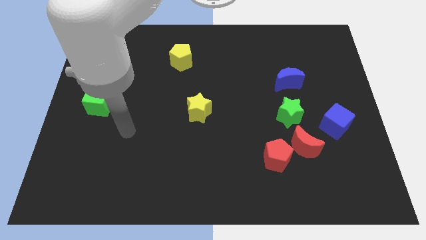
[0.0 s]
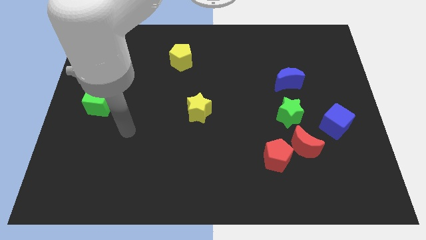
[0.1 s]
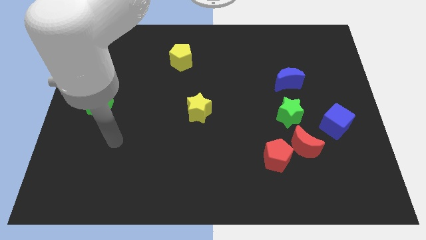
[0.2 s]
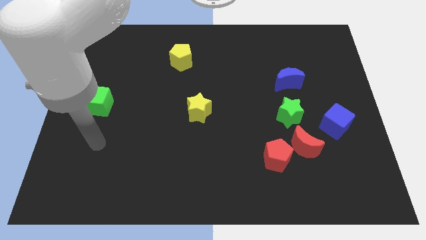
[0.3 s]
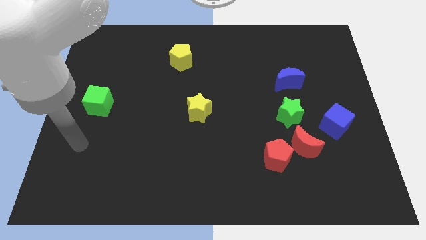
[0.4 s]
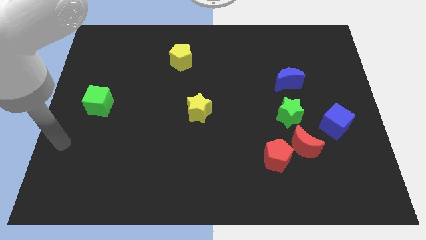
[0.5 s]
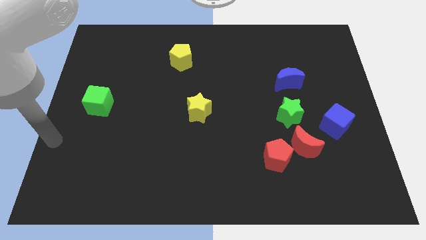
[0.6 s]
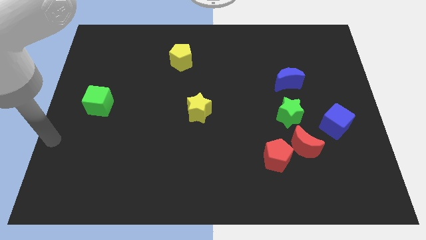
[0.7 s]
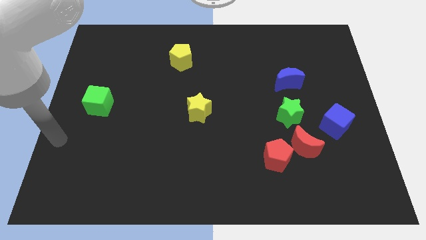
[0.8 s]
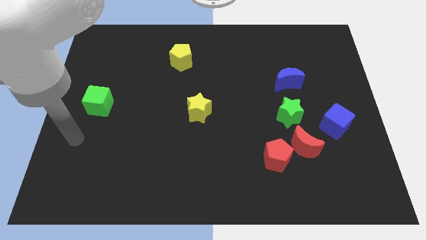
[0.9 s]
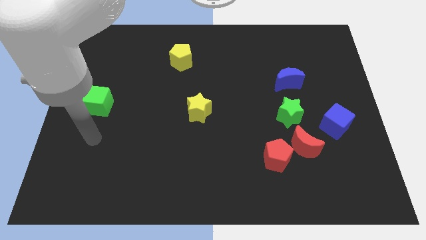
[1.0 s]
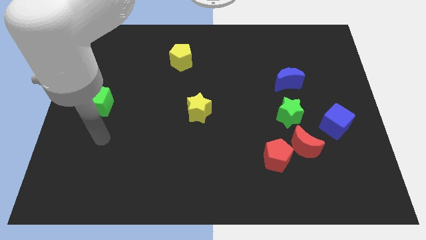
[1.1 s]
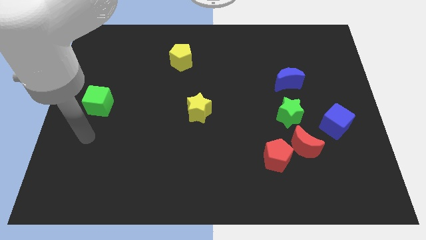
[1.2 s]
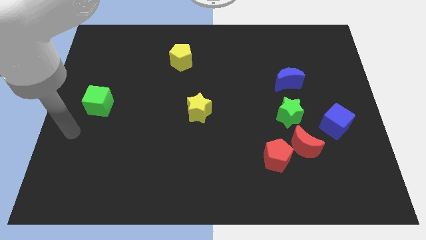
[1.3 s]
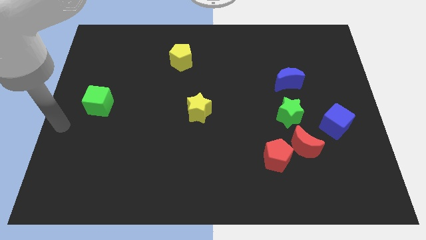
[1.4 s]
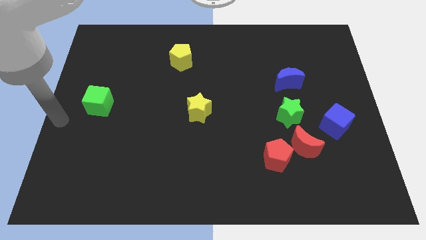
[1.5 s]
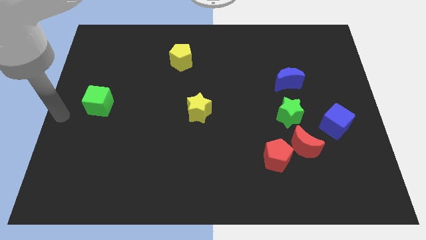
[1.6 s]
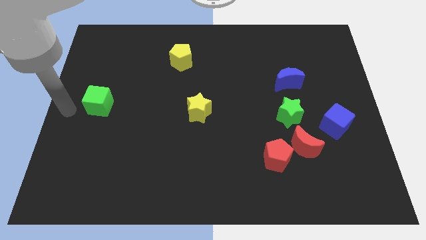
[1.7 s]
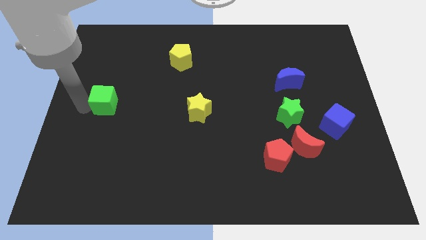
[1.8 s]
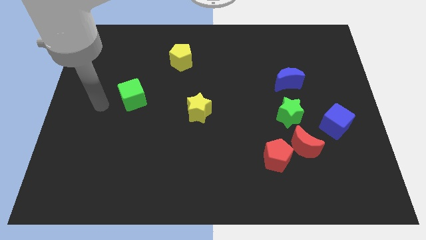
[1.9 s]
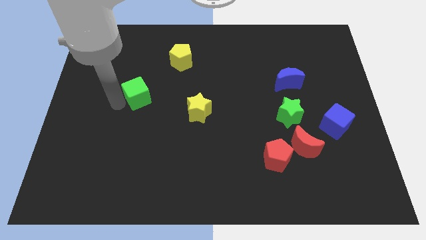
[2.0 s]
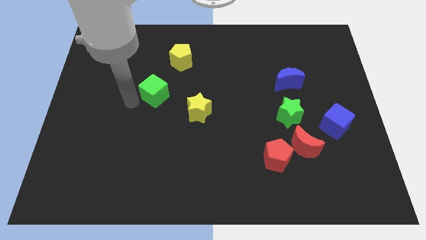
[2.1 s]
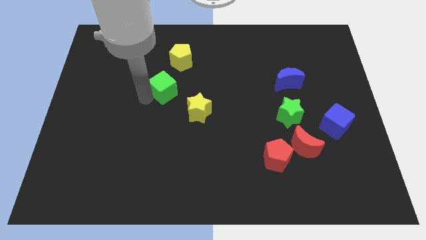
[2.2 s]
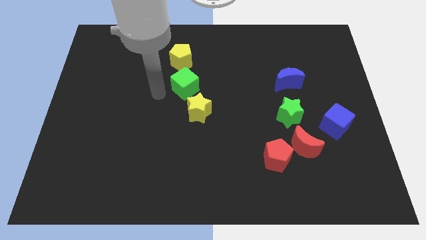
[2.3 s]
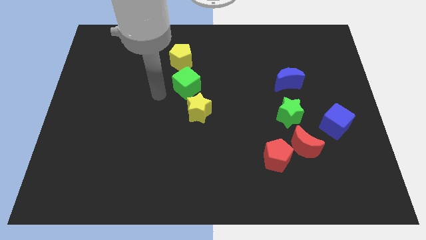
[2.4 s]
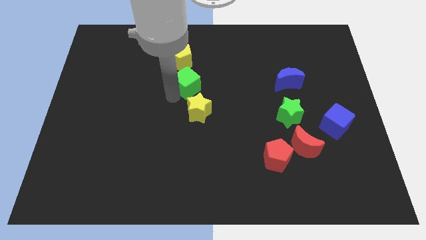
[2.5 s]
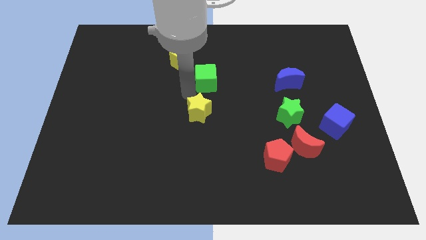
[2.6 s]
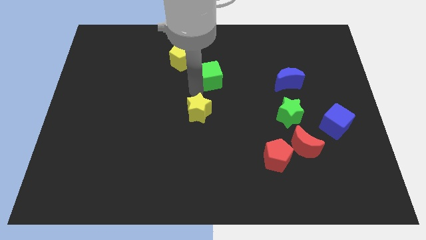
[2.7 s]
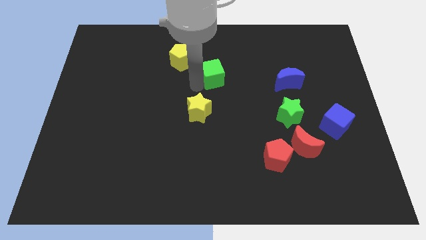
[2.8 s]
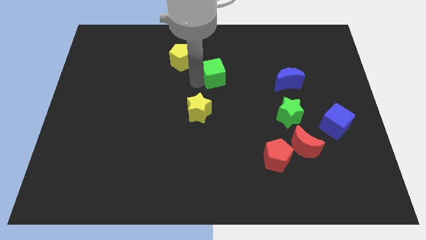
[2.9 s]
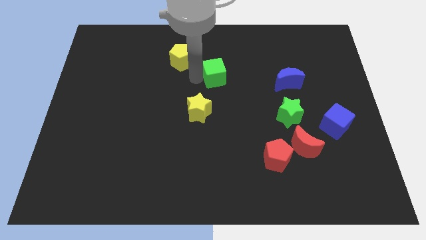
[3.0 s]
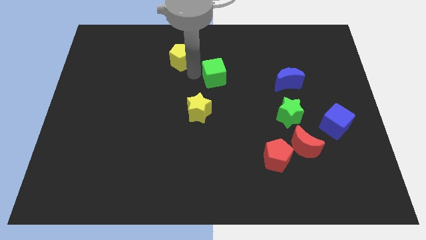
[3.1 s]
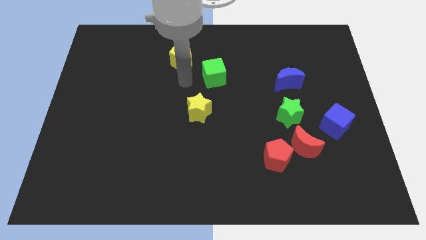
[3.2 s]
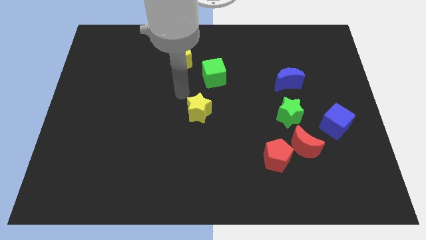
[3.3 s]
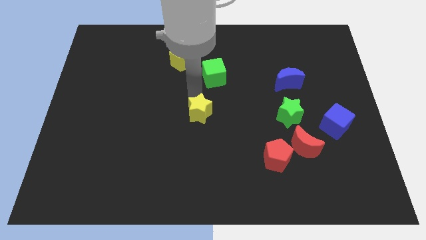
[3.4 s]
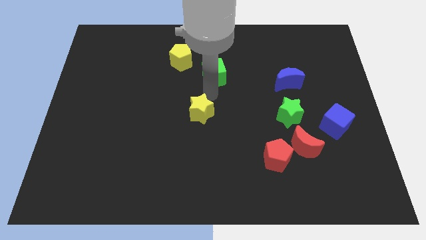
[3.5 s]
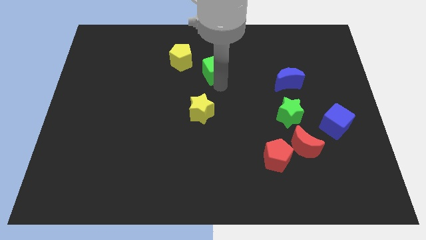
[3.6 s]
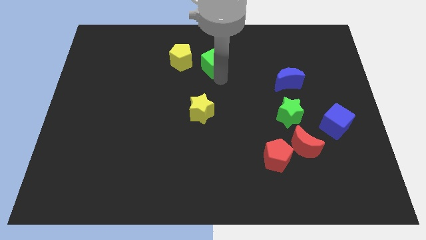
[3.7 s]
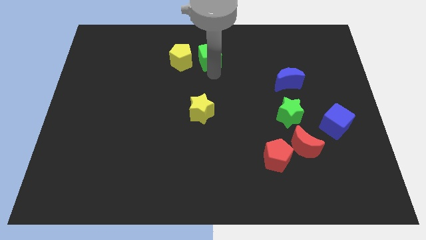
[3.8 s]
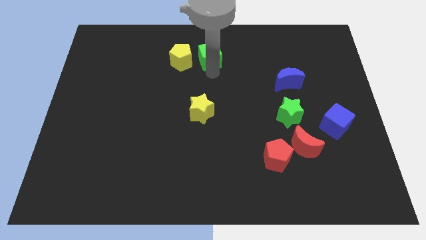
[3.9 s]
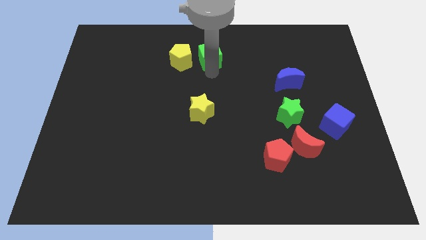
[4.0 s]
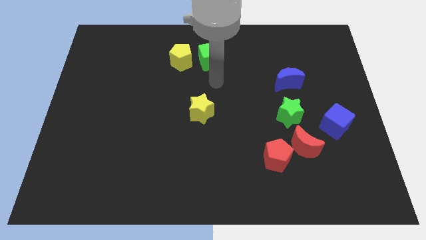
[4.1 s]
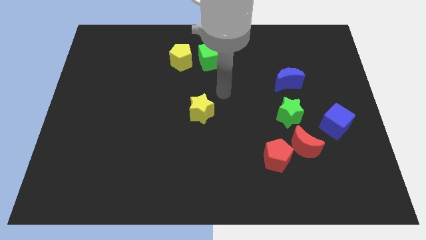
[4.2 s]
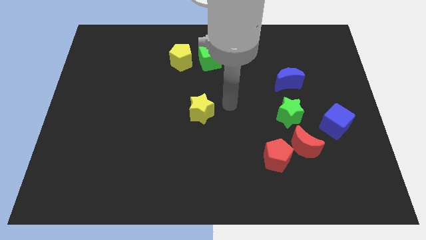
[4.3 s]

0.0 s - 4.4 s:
move green cube to the right of the yellow pentagon

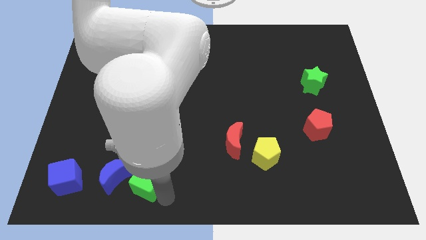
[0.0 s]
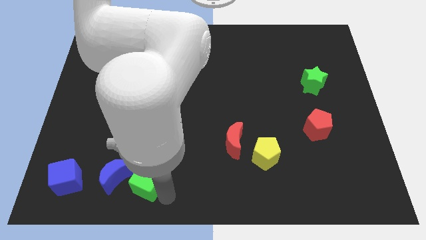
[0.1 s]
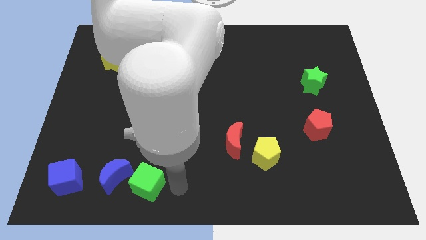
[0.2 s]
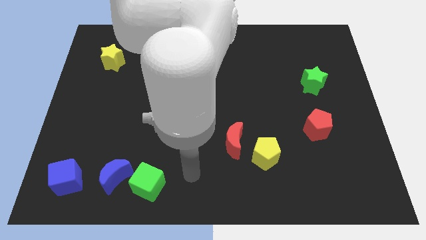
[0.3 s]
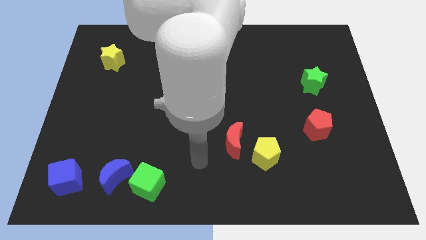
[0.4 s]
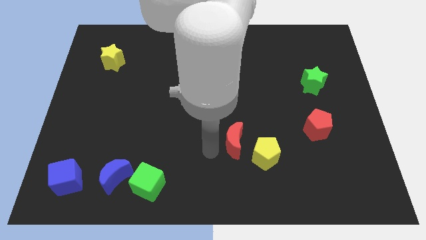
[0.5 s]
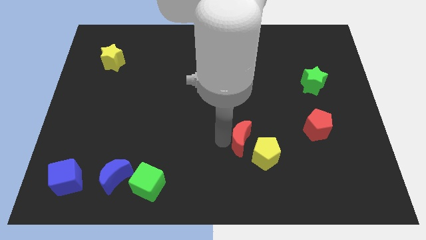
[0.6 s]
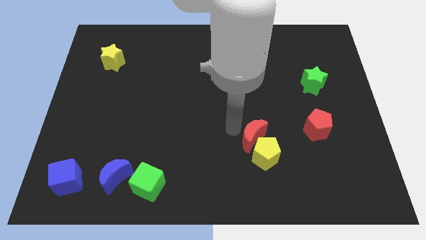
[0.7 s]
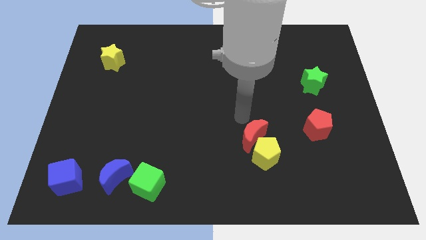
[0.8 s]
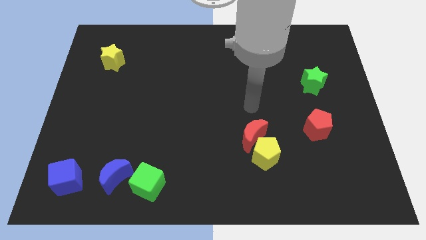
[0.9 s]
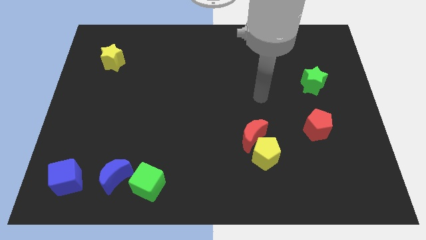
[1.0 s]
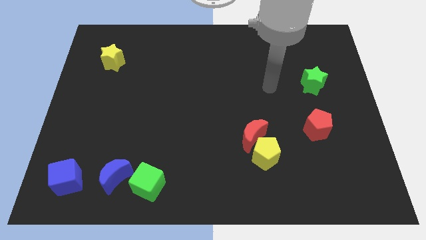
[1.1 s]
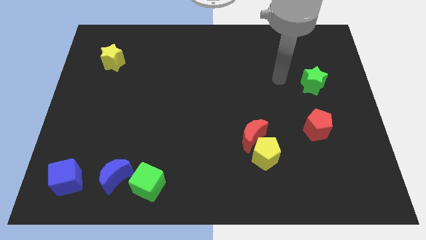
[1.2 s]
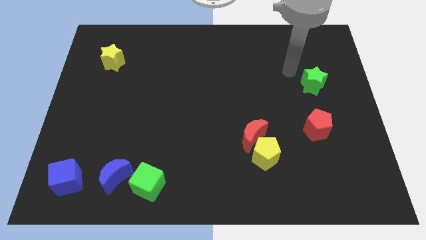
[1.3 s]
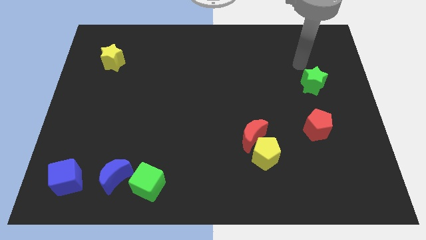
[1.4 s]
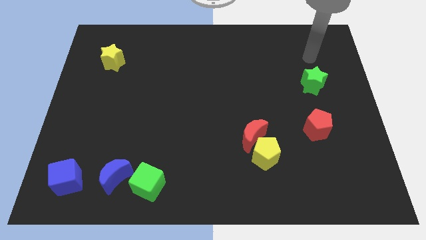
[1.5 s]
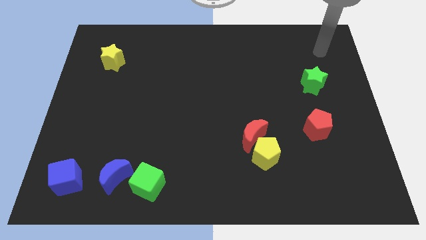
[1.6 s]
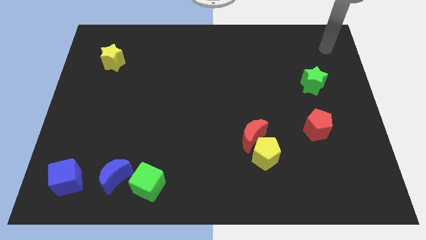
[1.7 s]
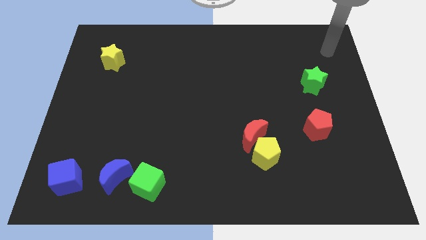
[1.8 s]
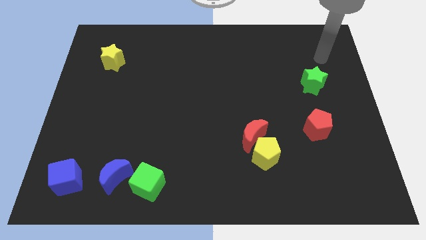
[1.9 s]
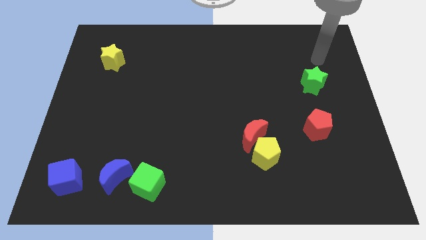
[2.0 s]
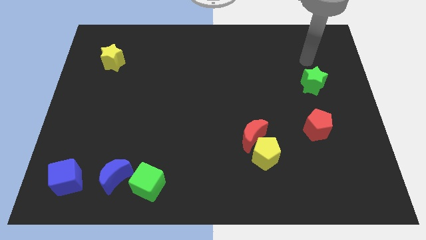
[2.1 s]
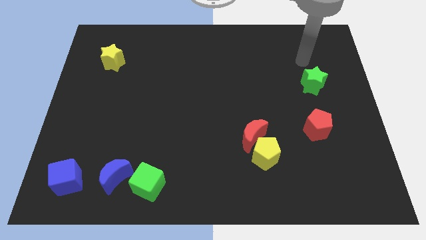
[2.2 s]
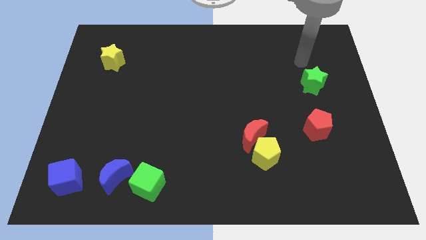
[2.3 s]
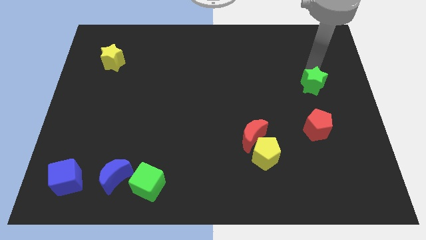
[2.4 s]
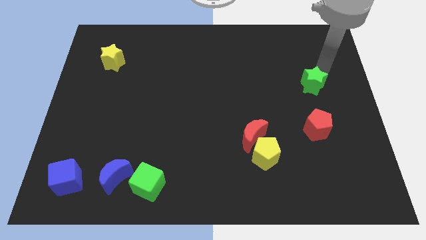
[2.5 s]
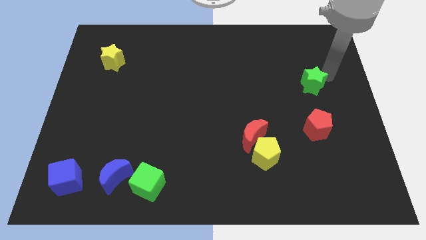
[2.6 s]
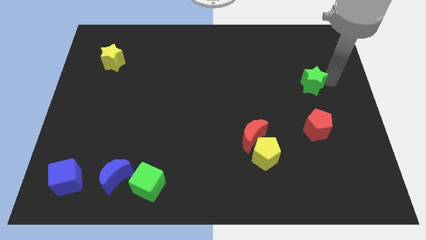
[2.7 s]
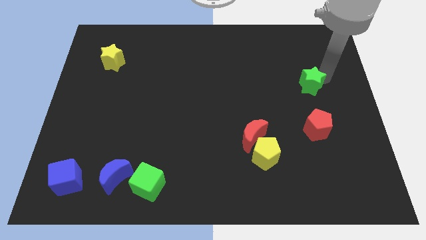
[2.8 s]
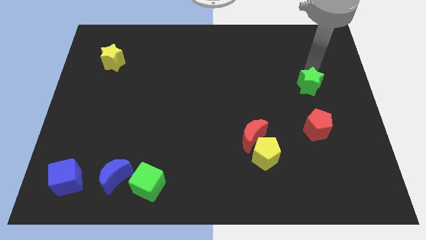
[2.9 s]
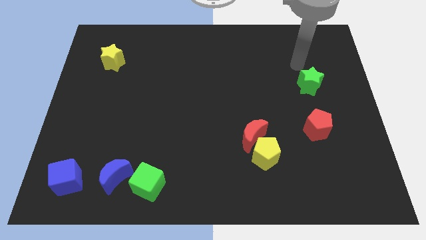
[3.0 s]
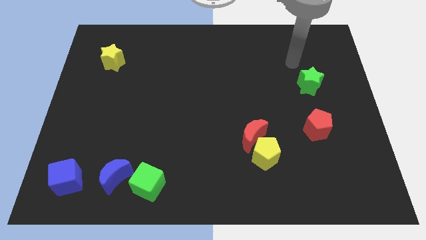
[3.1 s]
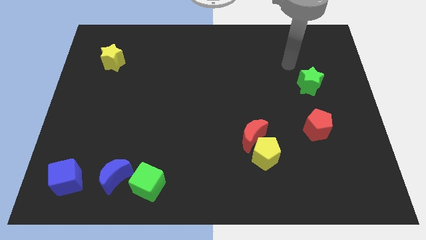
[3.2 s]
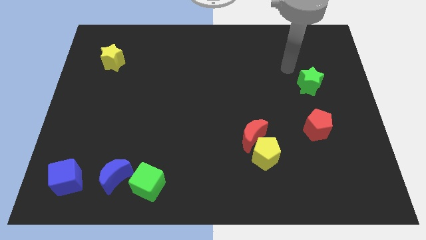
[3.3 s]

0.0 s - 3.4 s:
push the red moon to the top left of the yellow pentagon

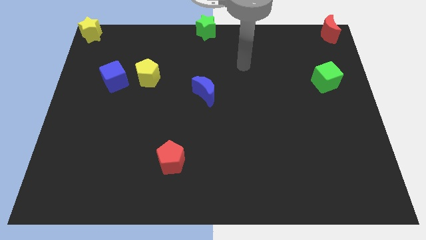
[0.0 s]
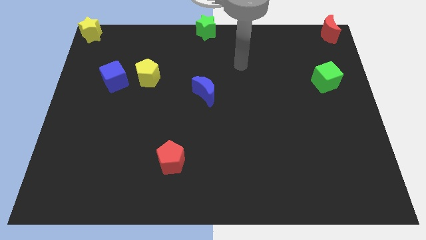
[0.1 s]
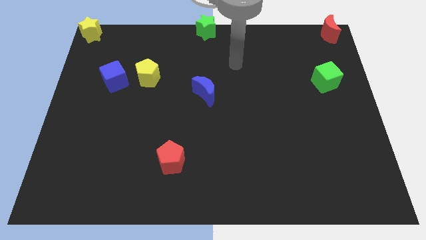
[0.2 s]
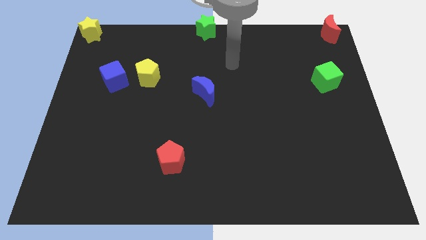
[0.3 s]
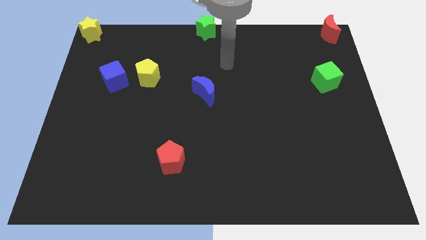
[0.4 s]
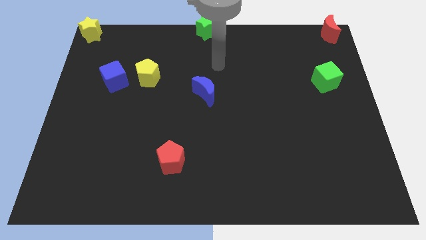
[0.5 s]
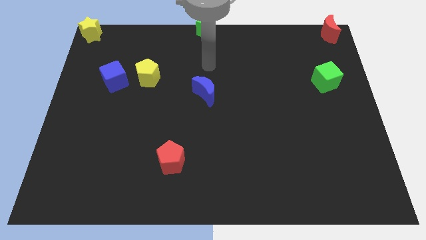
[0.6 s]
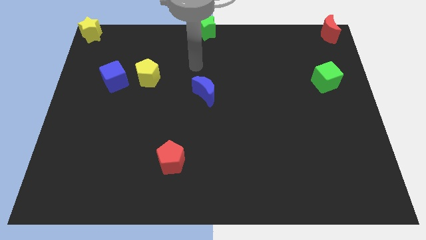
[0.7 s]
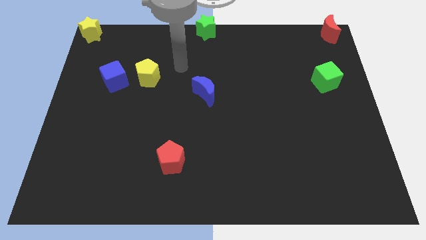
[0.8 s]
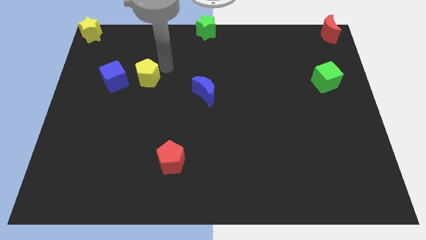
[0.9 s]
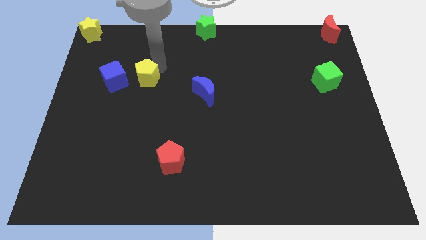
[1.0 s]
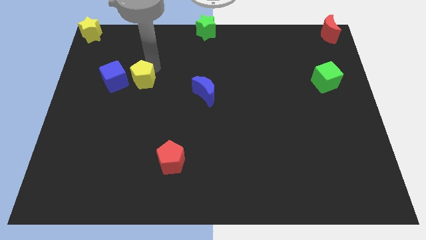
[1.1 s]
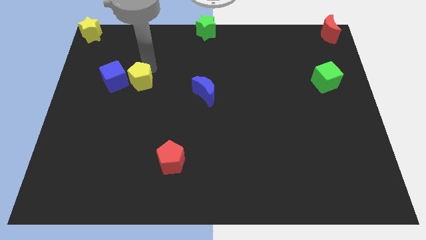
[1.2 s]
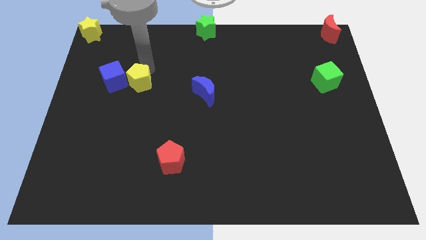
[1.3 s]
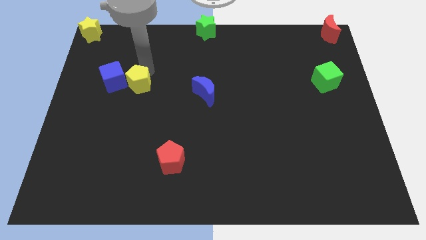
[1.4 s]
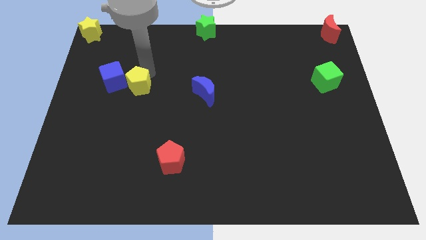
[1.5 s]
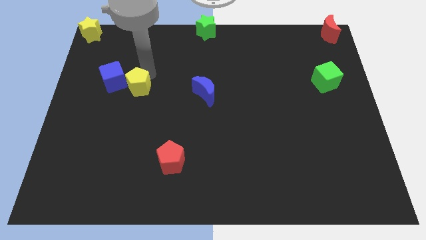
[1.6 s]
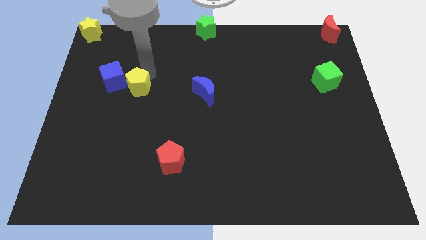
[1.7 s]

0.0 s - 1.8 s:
push the yellow pentagon into the blue cube
